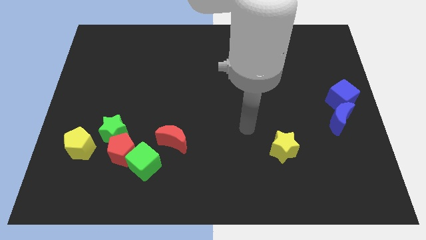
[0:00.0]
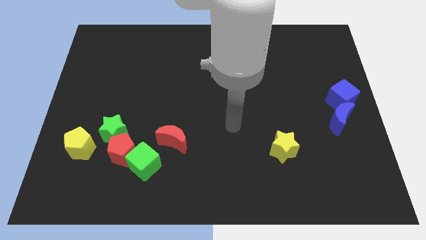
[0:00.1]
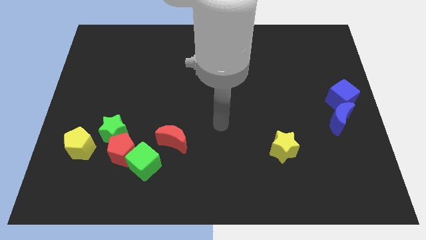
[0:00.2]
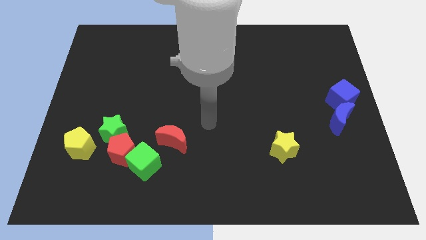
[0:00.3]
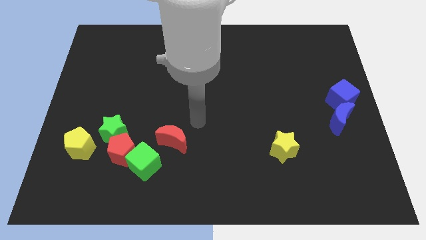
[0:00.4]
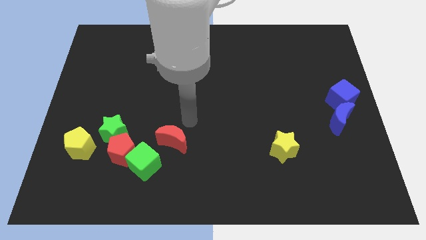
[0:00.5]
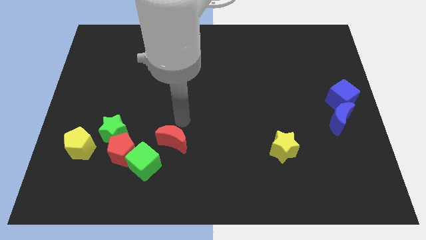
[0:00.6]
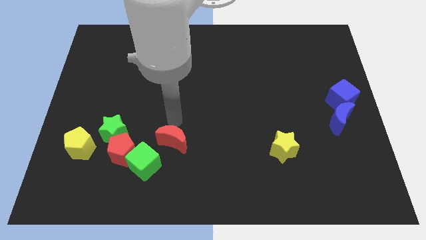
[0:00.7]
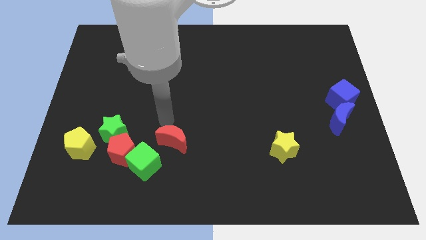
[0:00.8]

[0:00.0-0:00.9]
push arm close to red crescent

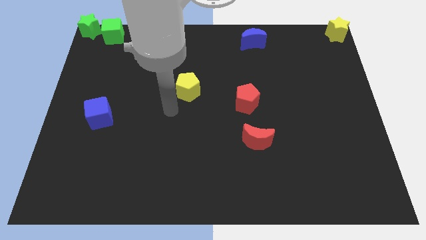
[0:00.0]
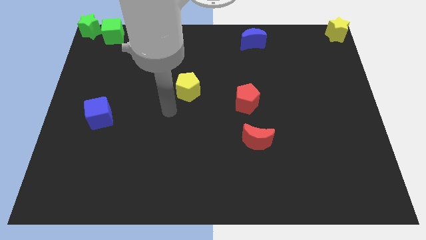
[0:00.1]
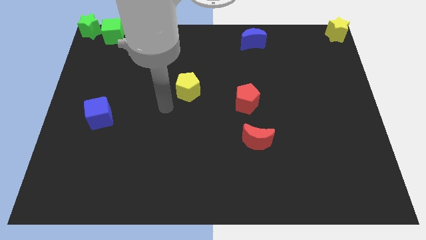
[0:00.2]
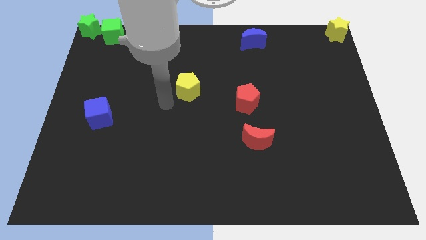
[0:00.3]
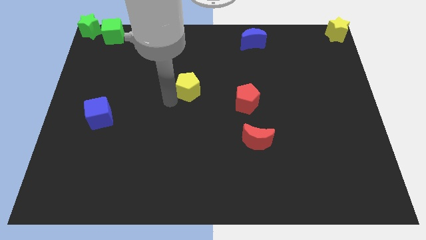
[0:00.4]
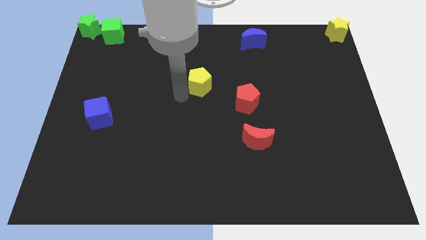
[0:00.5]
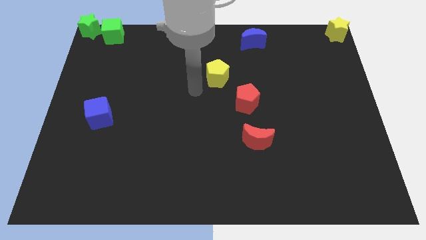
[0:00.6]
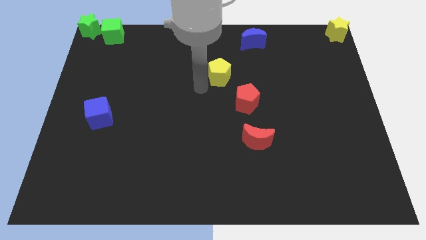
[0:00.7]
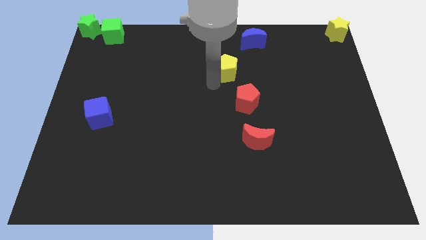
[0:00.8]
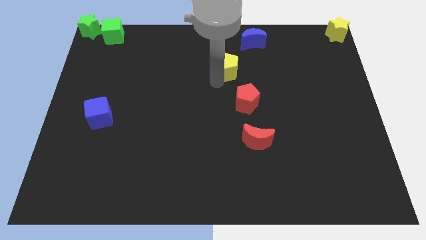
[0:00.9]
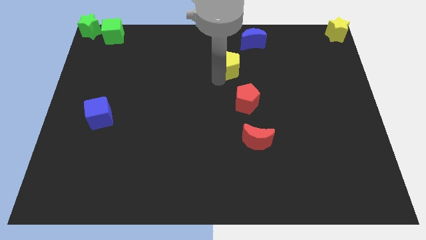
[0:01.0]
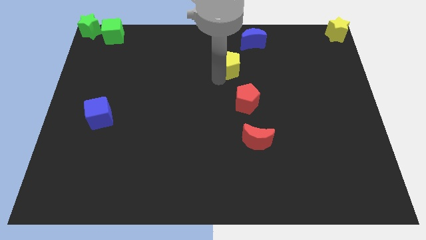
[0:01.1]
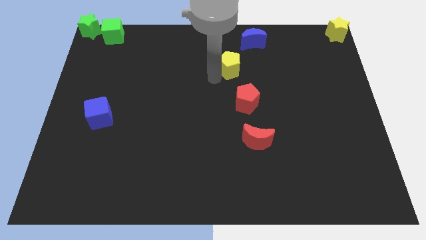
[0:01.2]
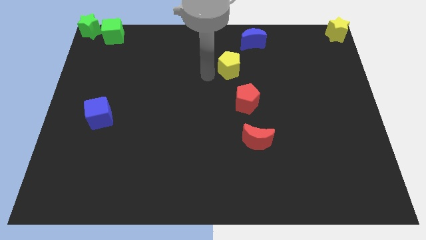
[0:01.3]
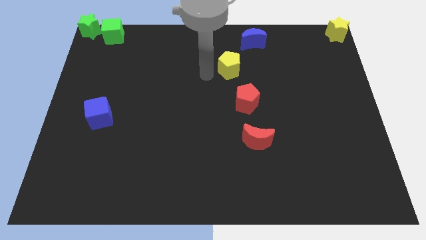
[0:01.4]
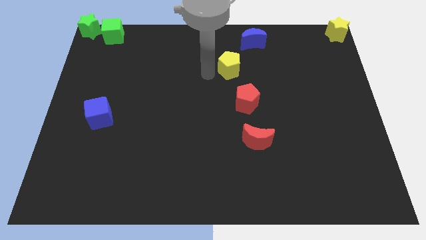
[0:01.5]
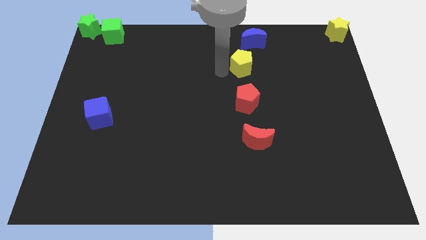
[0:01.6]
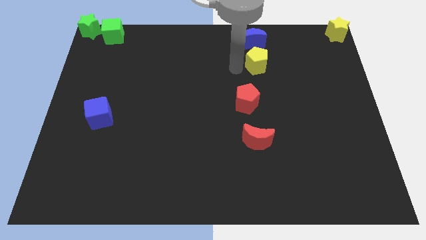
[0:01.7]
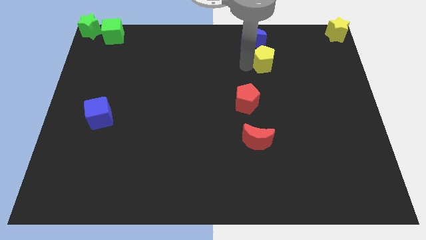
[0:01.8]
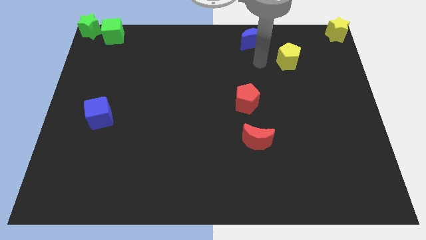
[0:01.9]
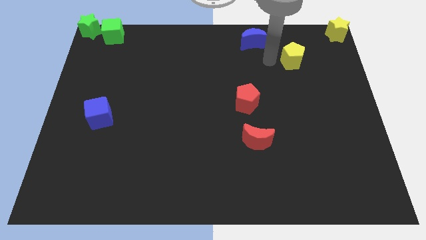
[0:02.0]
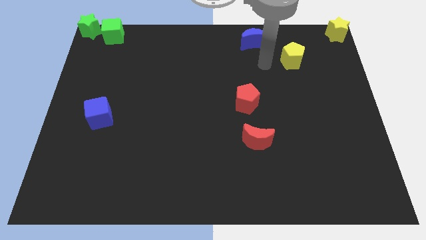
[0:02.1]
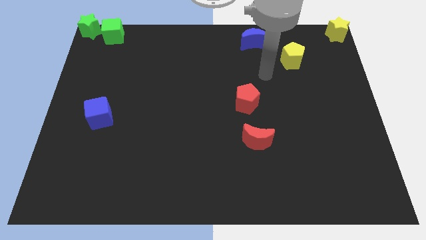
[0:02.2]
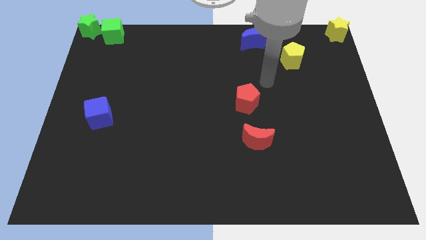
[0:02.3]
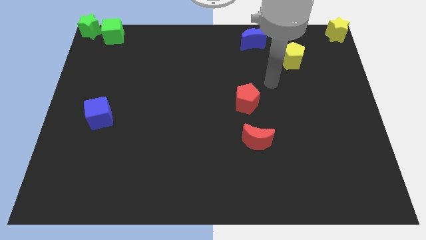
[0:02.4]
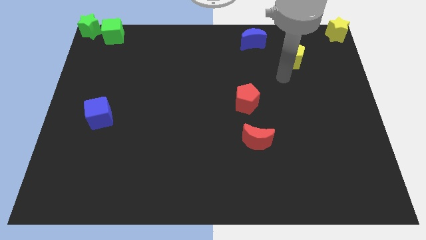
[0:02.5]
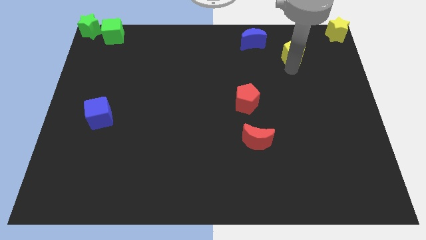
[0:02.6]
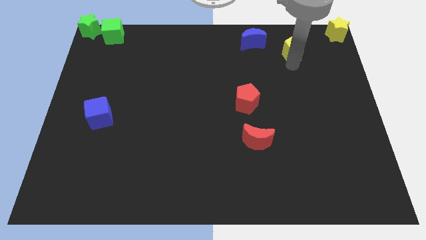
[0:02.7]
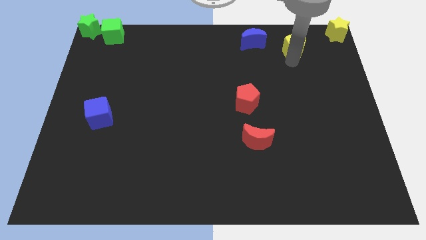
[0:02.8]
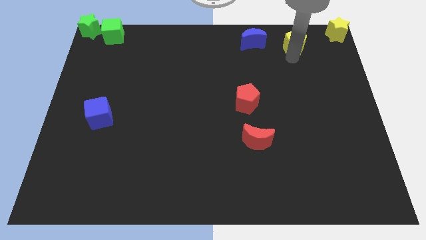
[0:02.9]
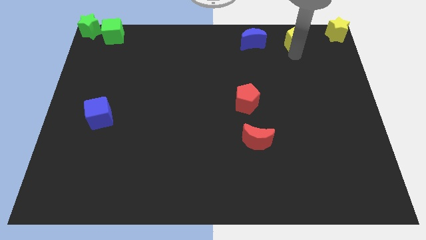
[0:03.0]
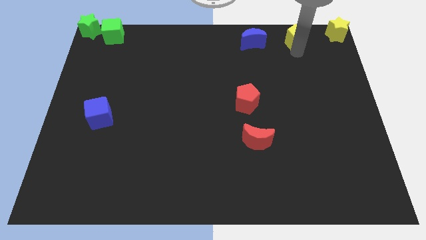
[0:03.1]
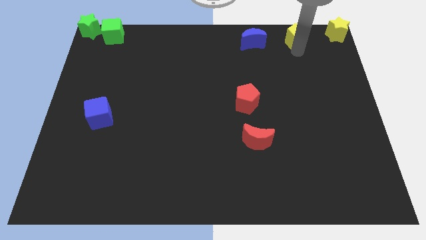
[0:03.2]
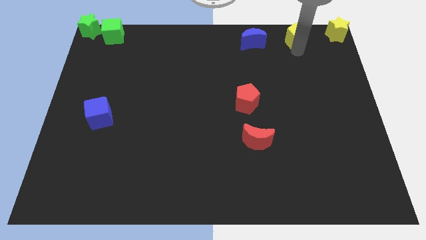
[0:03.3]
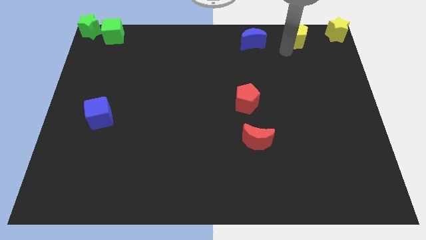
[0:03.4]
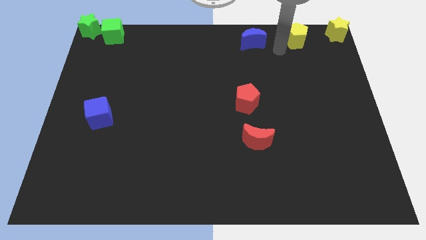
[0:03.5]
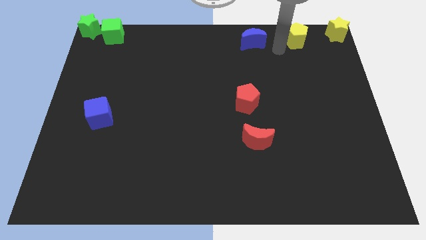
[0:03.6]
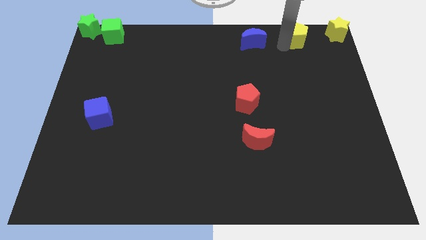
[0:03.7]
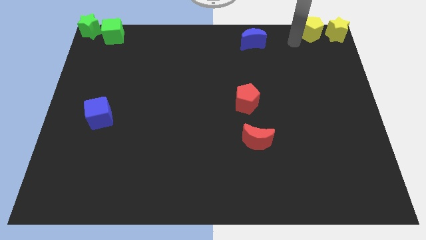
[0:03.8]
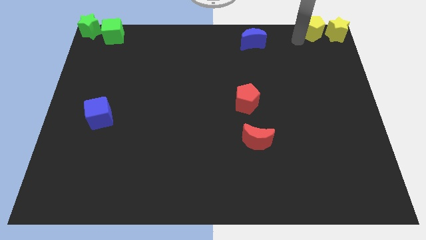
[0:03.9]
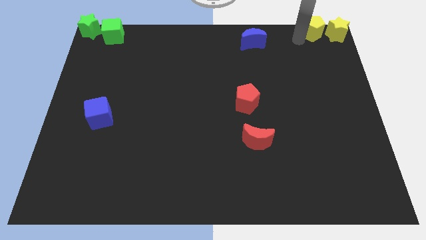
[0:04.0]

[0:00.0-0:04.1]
push the yellow pentagon to the left of yellow star

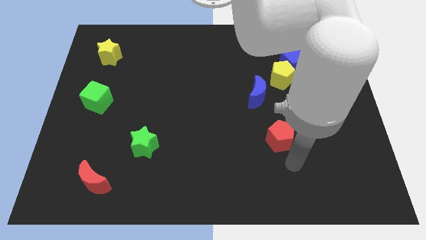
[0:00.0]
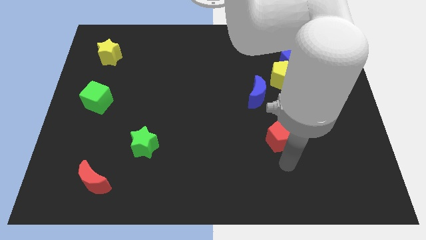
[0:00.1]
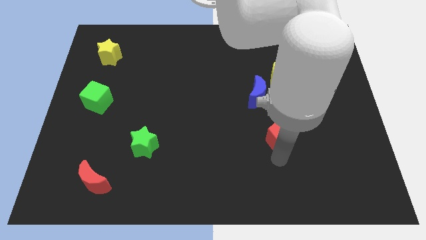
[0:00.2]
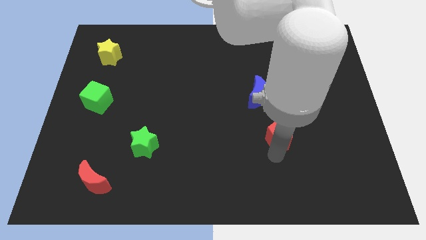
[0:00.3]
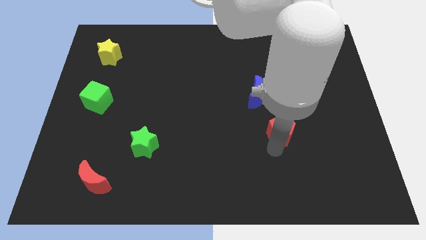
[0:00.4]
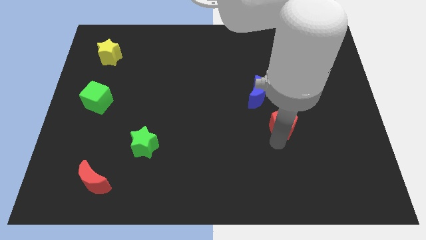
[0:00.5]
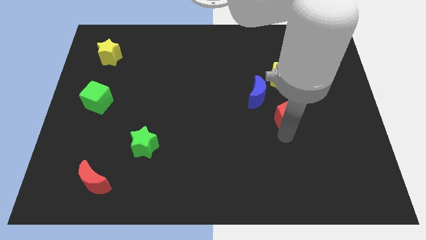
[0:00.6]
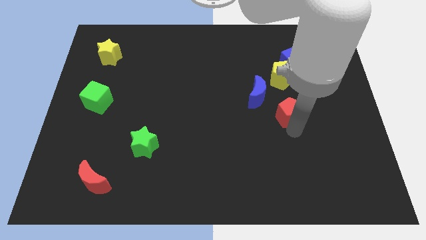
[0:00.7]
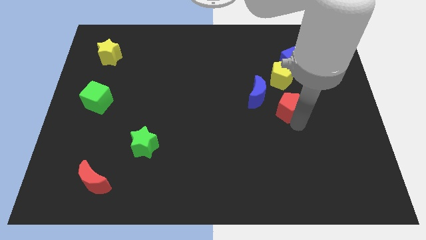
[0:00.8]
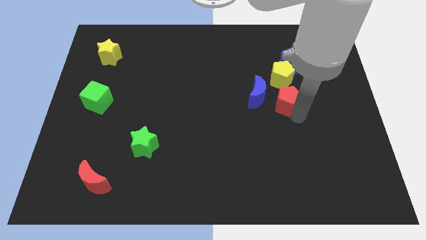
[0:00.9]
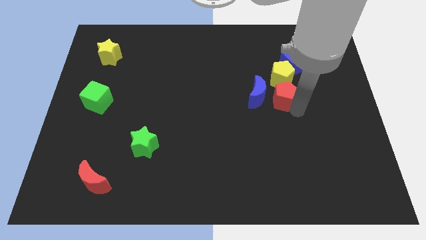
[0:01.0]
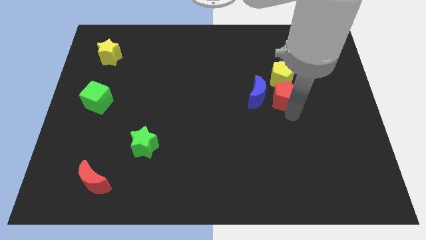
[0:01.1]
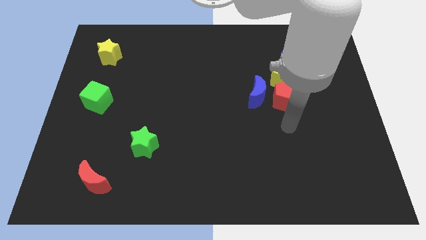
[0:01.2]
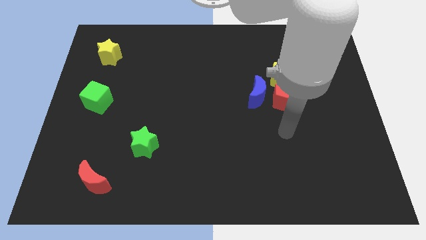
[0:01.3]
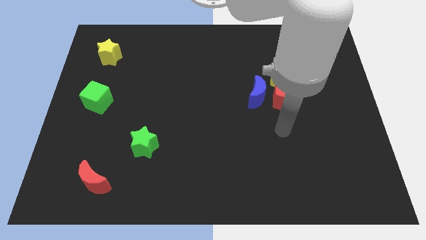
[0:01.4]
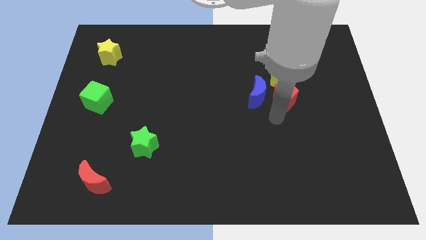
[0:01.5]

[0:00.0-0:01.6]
move the red pentagon underneath the yellow pentagon

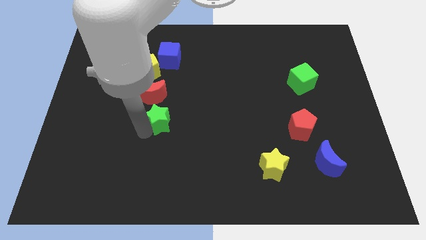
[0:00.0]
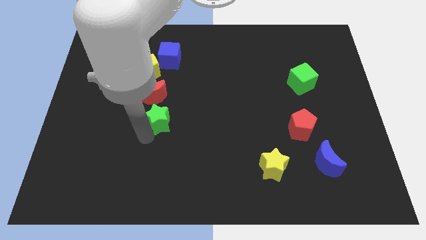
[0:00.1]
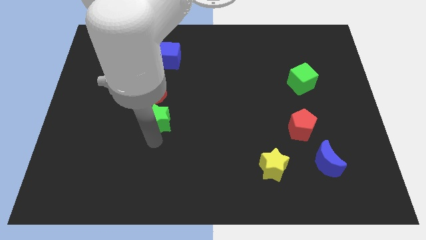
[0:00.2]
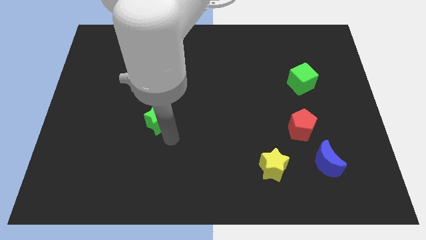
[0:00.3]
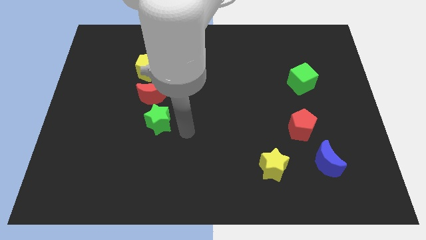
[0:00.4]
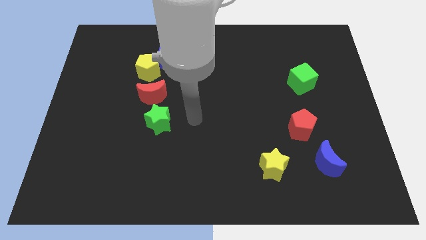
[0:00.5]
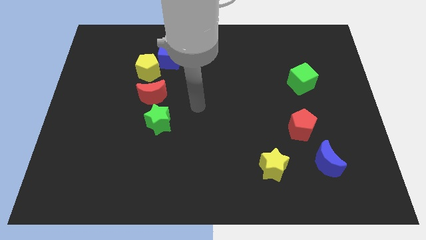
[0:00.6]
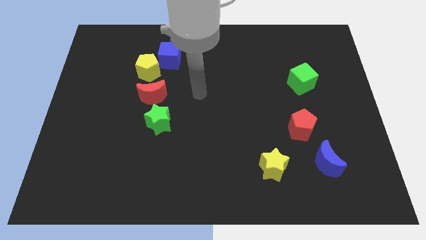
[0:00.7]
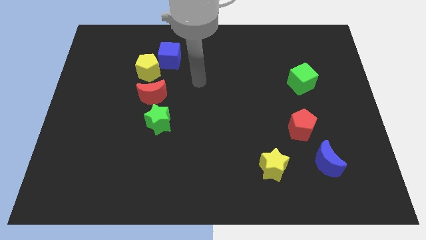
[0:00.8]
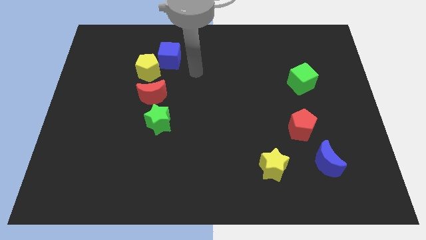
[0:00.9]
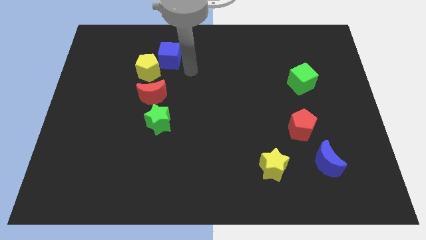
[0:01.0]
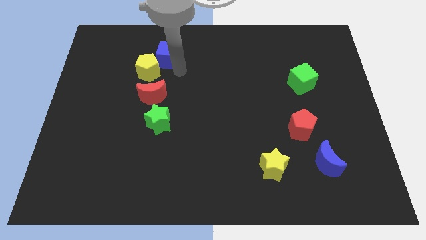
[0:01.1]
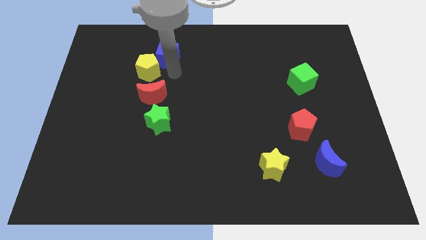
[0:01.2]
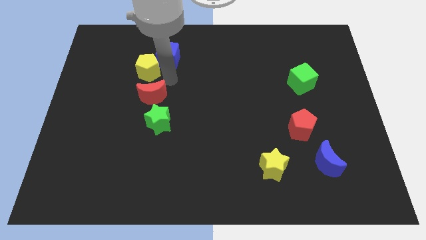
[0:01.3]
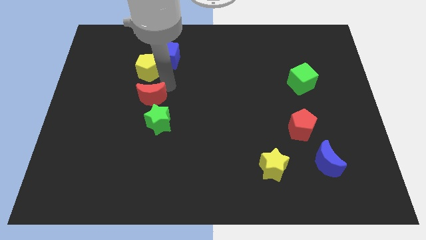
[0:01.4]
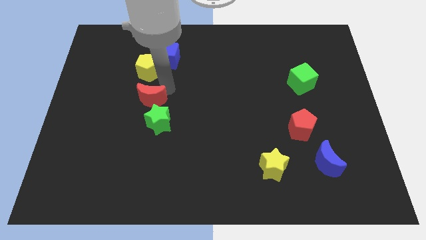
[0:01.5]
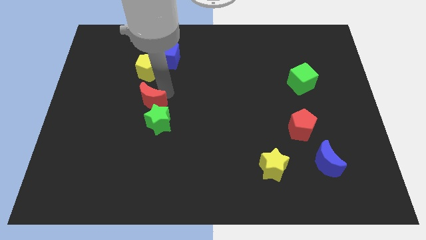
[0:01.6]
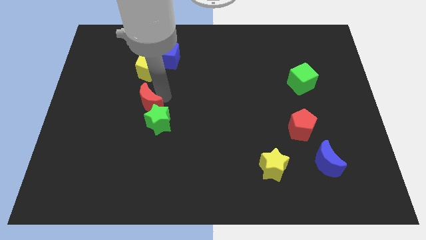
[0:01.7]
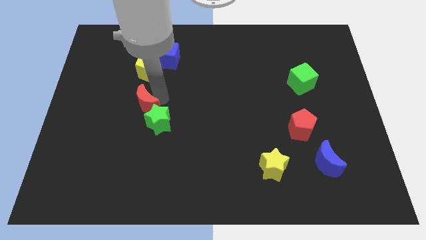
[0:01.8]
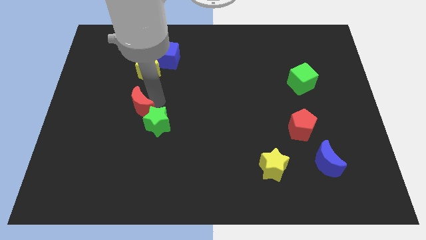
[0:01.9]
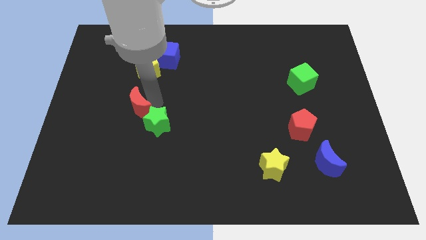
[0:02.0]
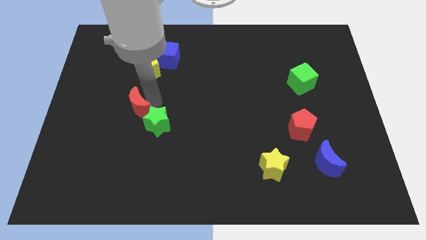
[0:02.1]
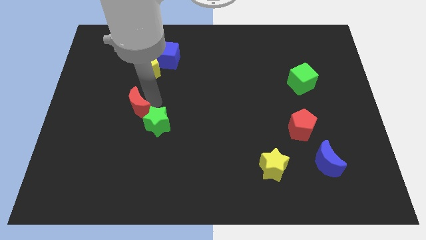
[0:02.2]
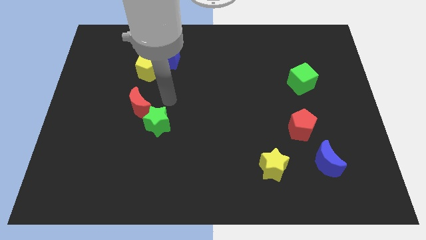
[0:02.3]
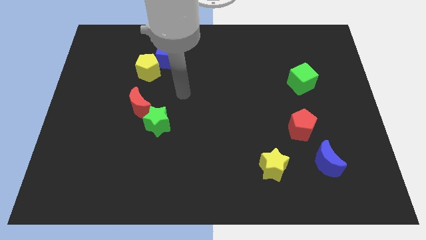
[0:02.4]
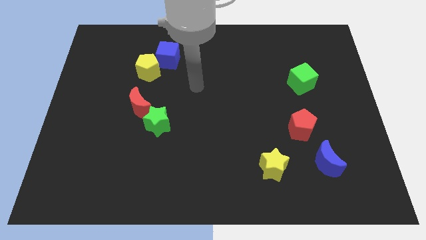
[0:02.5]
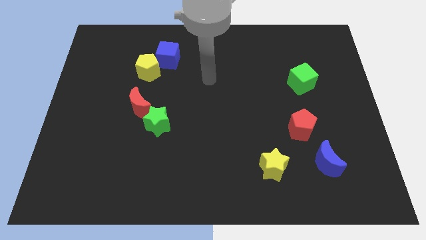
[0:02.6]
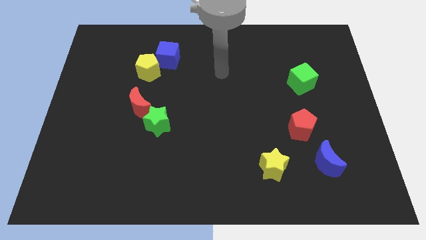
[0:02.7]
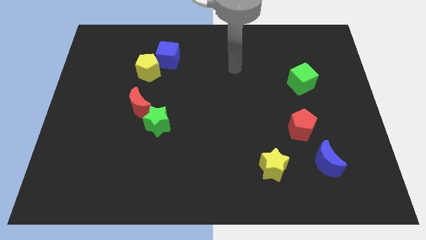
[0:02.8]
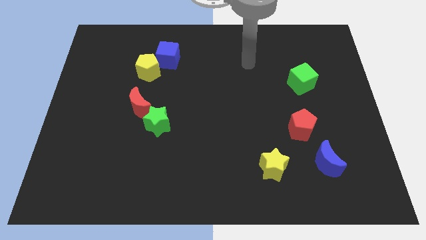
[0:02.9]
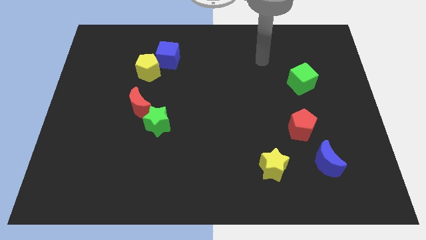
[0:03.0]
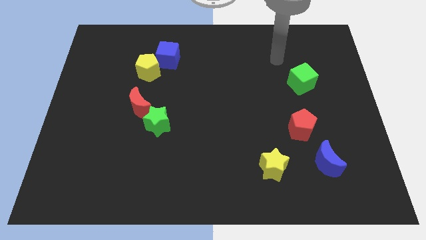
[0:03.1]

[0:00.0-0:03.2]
adjust the red crescent diagonally to the top left of the green star
